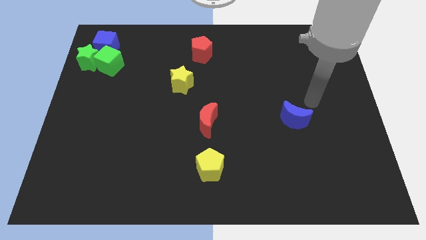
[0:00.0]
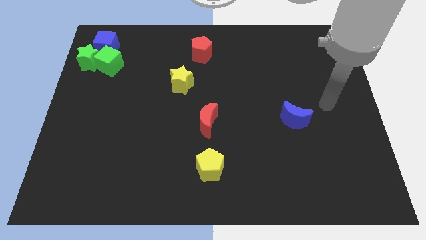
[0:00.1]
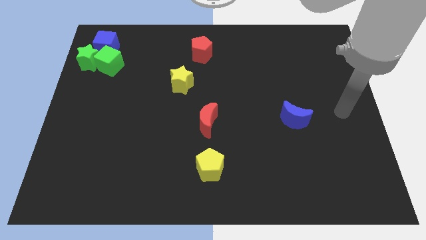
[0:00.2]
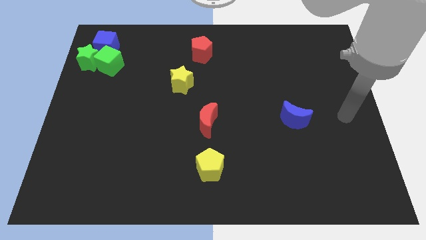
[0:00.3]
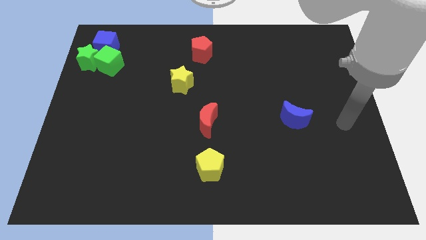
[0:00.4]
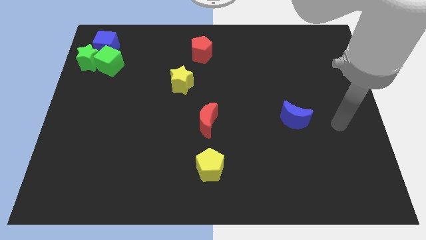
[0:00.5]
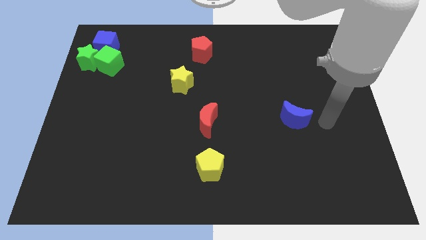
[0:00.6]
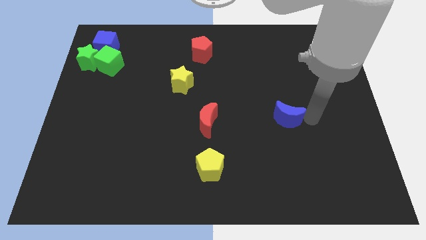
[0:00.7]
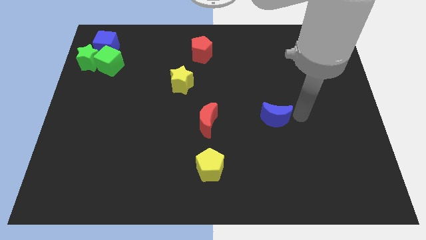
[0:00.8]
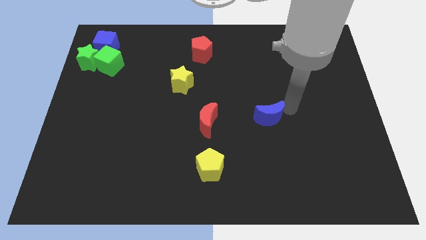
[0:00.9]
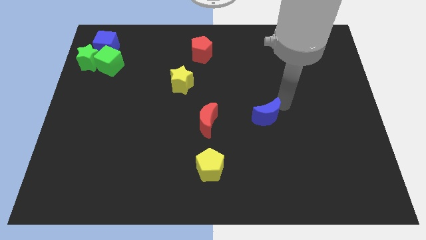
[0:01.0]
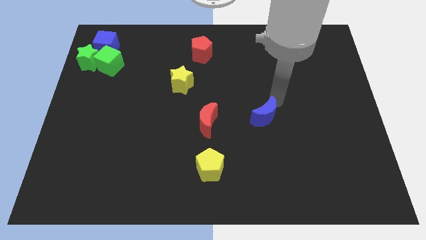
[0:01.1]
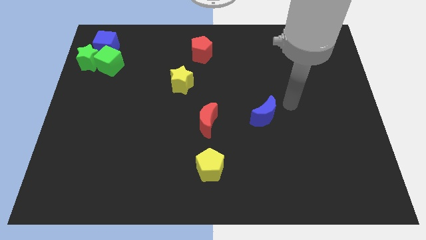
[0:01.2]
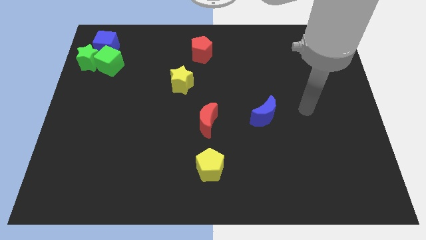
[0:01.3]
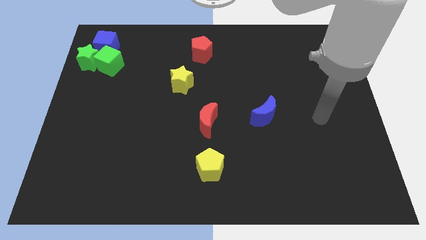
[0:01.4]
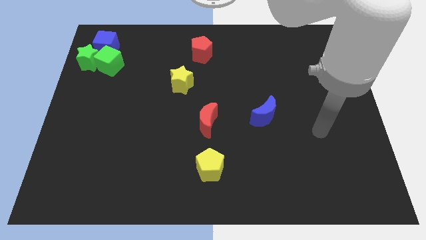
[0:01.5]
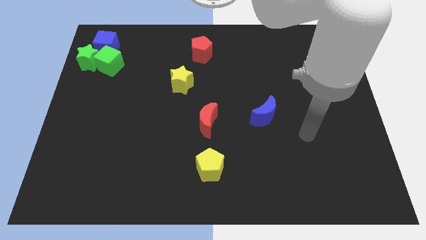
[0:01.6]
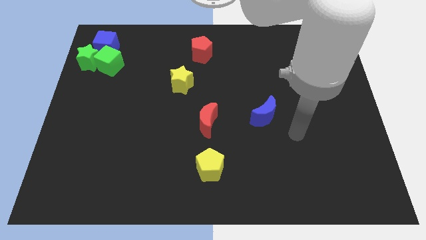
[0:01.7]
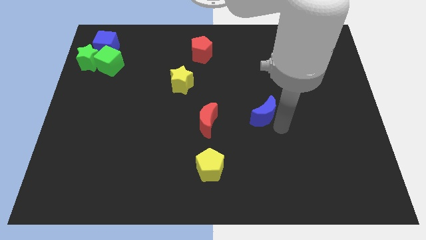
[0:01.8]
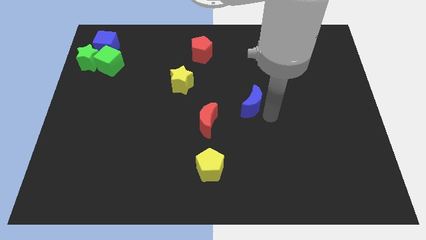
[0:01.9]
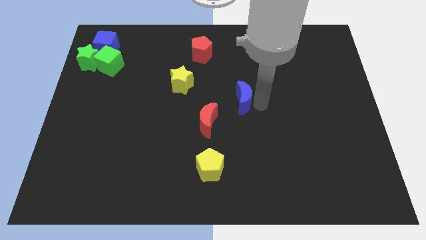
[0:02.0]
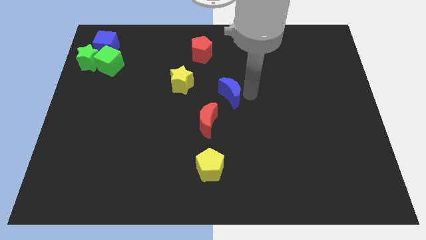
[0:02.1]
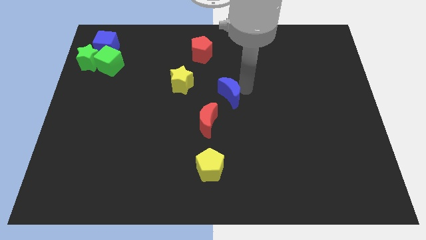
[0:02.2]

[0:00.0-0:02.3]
move the blue moon towards the right top of the red crescent

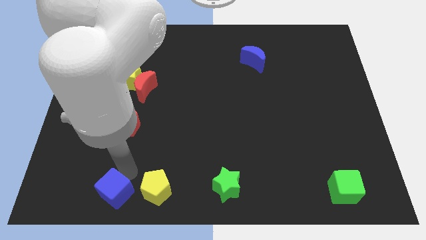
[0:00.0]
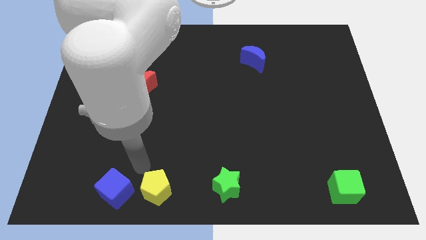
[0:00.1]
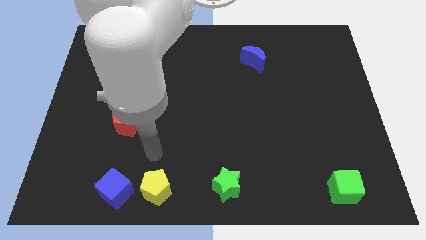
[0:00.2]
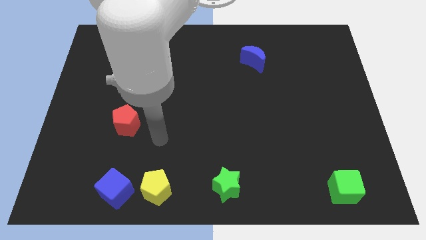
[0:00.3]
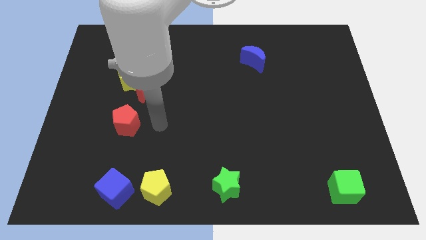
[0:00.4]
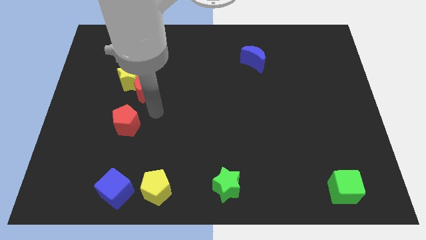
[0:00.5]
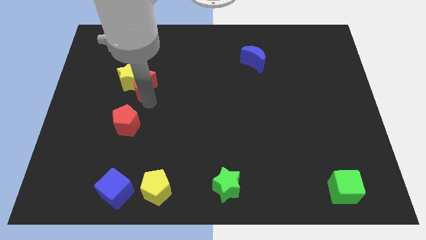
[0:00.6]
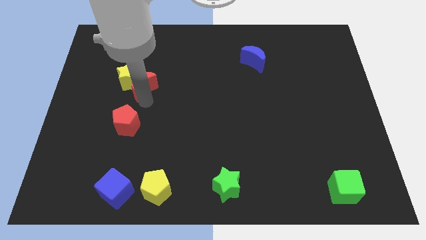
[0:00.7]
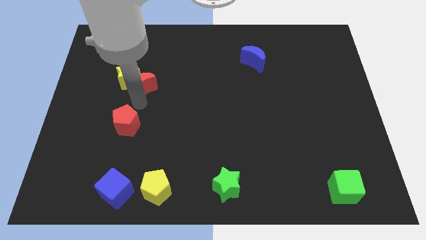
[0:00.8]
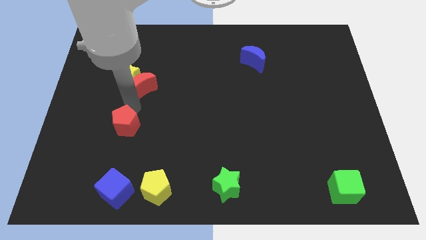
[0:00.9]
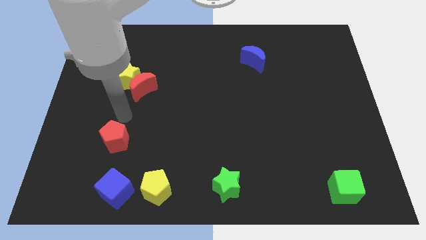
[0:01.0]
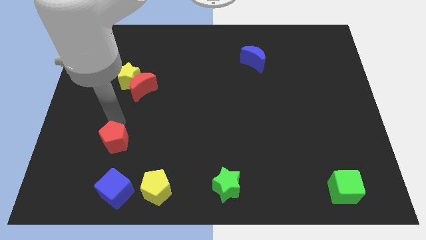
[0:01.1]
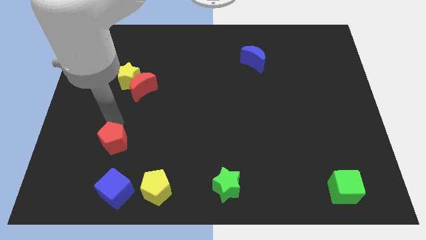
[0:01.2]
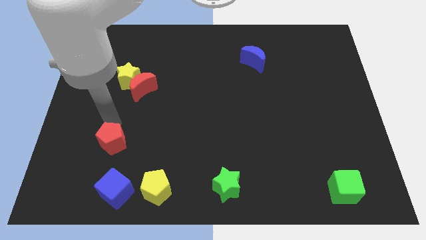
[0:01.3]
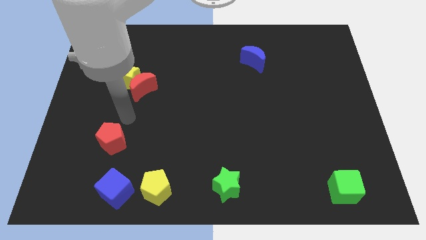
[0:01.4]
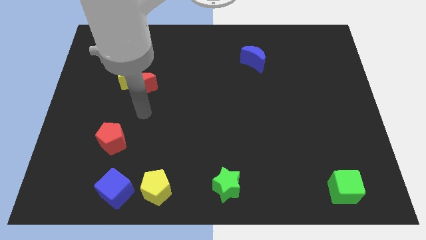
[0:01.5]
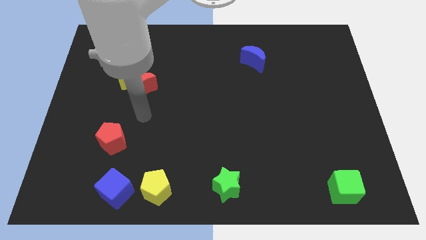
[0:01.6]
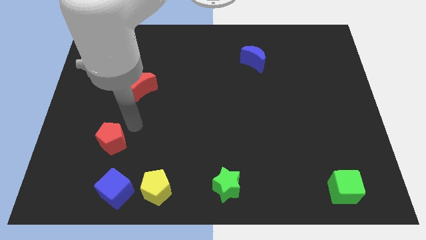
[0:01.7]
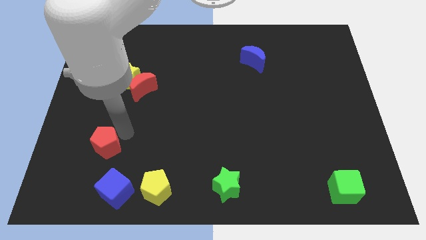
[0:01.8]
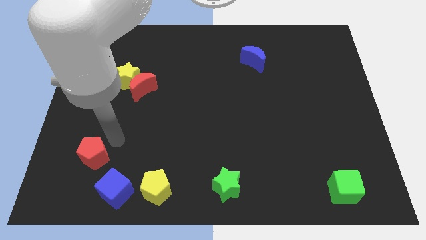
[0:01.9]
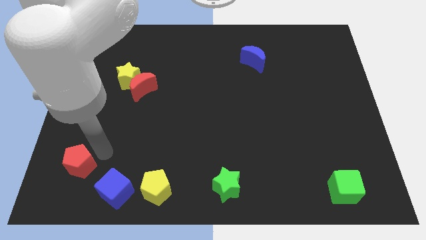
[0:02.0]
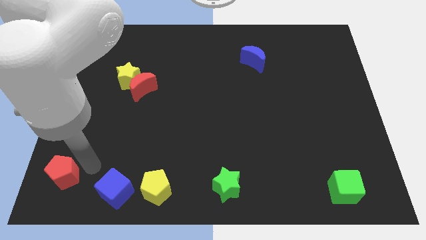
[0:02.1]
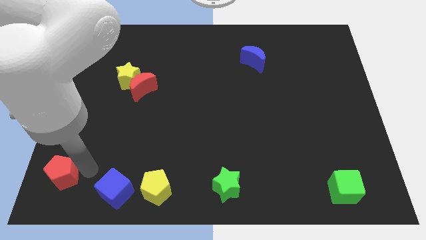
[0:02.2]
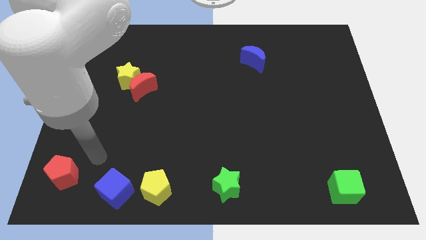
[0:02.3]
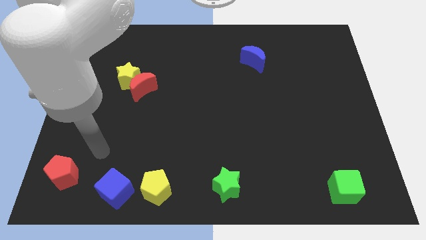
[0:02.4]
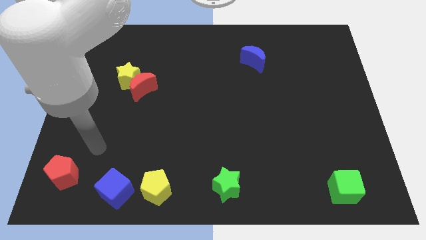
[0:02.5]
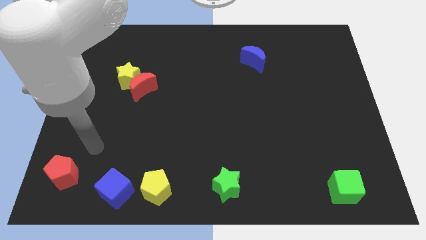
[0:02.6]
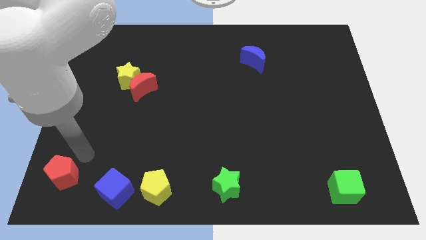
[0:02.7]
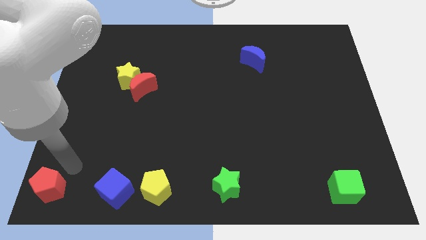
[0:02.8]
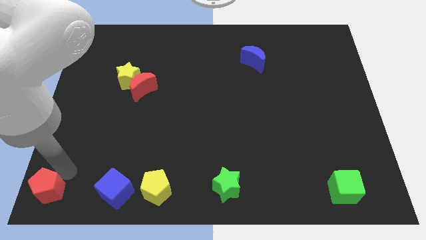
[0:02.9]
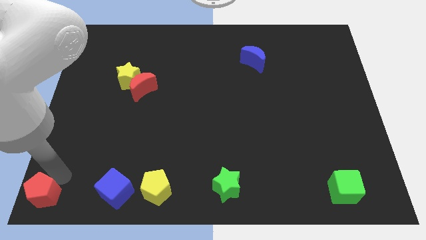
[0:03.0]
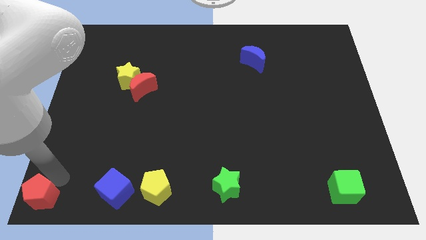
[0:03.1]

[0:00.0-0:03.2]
put the red pentagon at the bottom left corner of the board

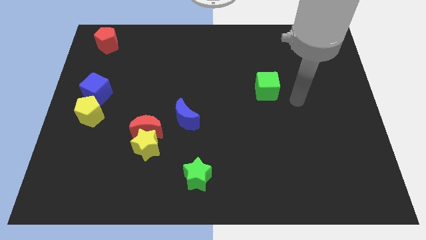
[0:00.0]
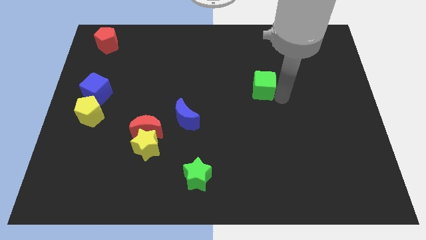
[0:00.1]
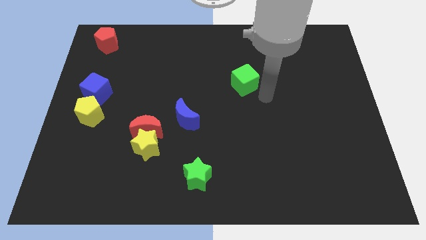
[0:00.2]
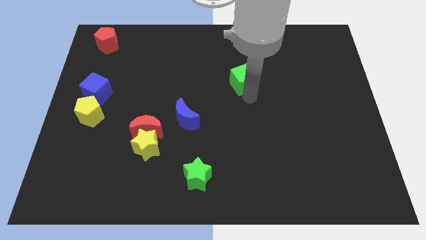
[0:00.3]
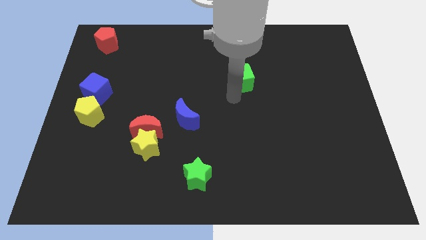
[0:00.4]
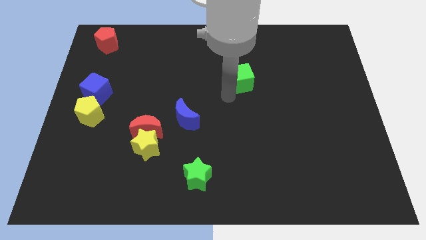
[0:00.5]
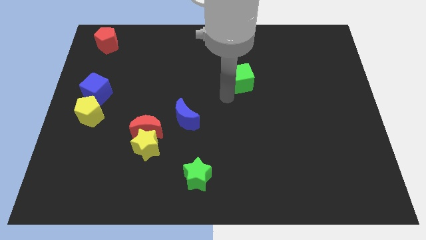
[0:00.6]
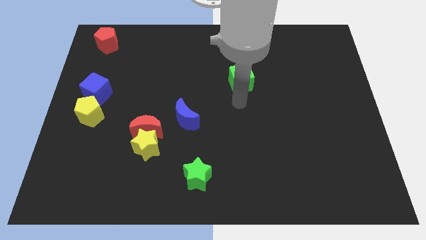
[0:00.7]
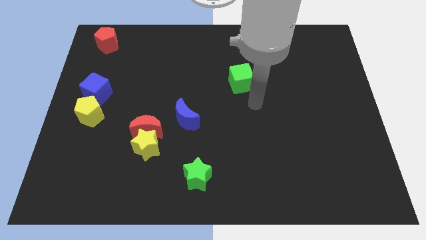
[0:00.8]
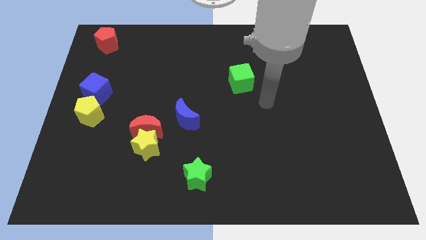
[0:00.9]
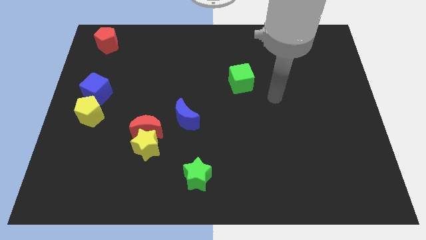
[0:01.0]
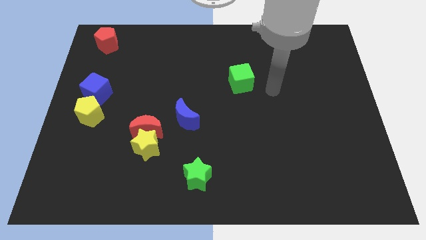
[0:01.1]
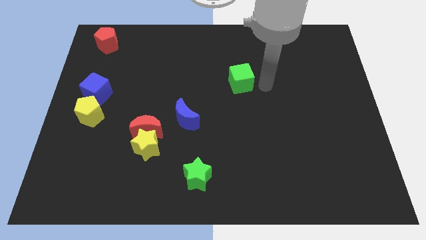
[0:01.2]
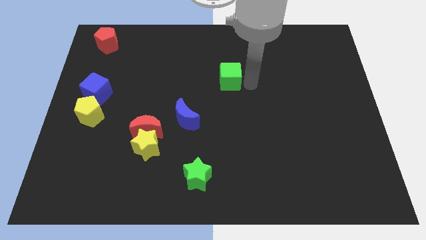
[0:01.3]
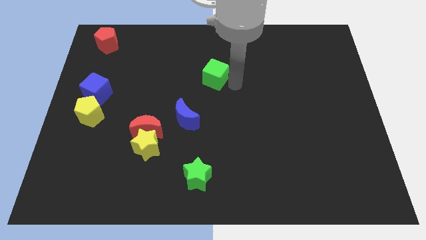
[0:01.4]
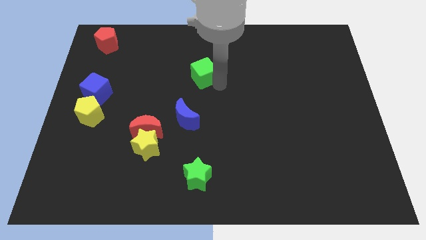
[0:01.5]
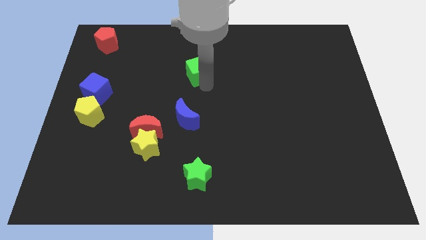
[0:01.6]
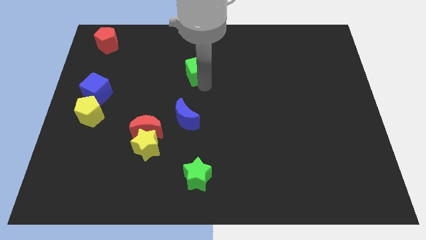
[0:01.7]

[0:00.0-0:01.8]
move the green cube vertically above the blue moon

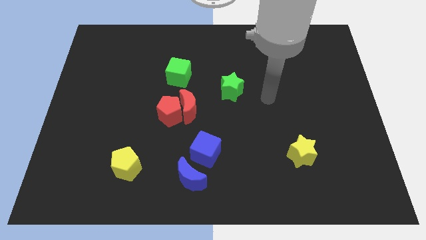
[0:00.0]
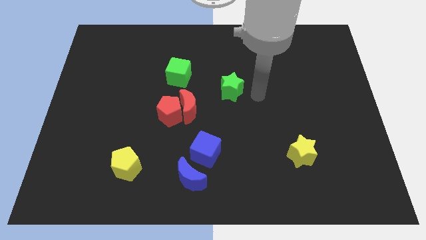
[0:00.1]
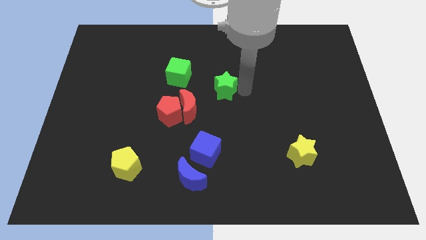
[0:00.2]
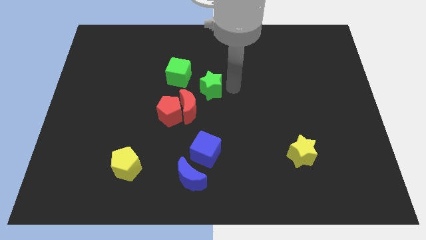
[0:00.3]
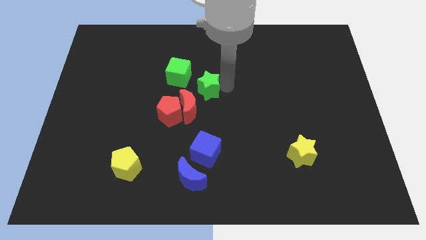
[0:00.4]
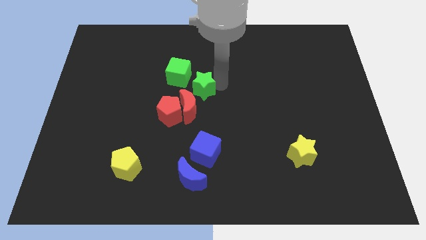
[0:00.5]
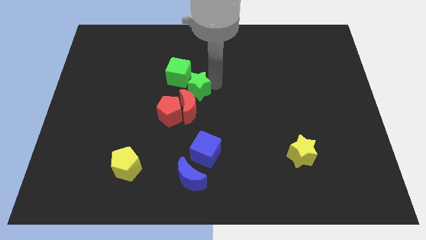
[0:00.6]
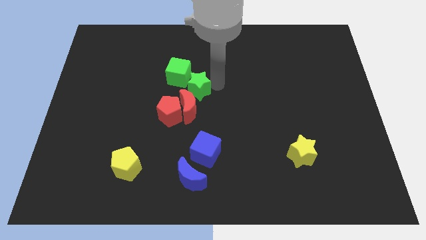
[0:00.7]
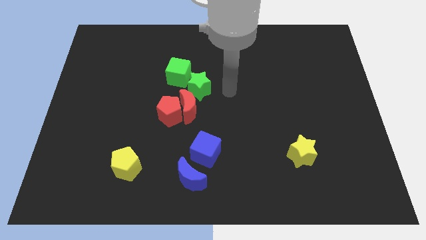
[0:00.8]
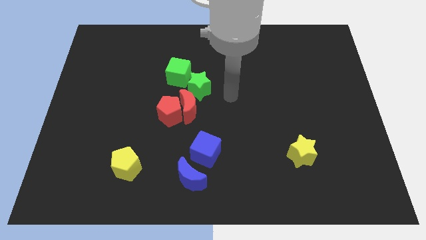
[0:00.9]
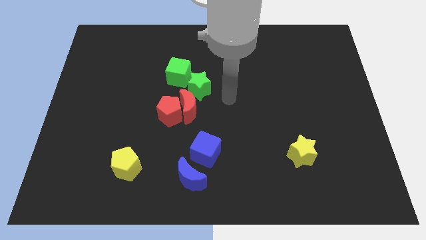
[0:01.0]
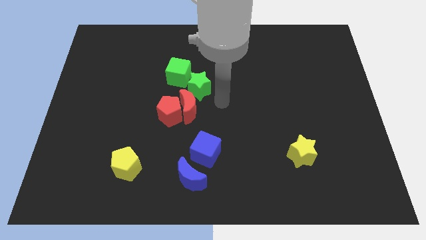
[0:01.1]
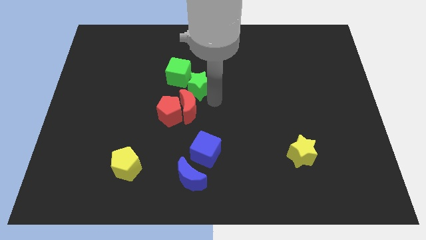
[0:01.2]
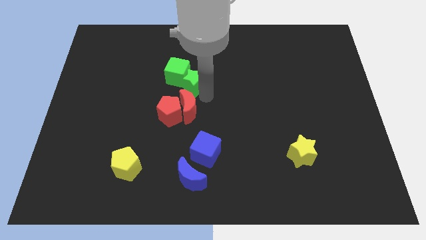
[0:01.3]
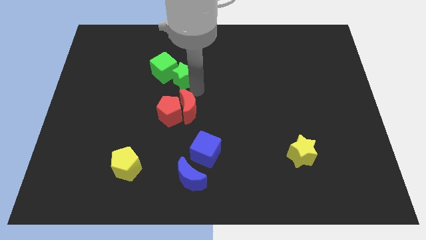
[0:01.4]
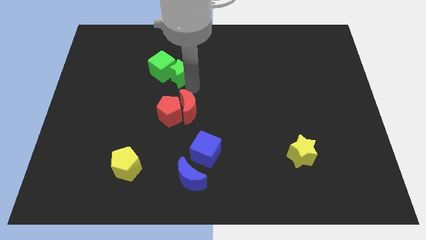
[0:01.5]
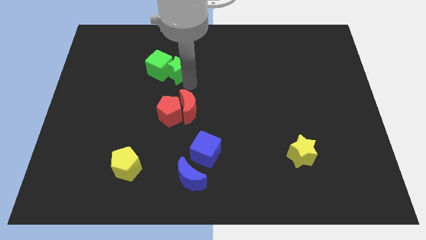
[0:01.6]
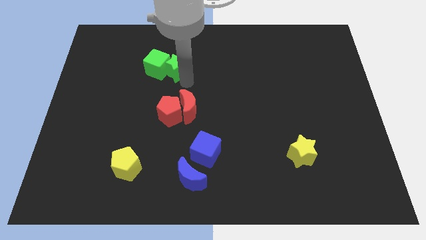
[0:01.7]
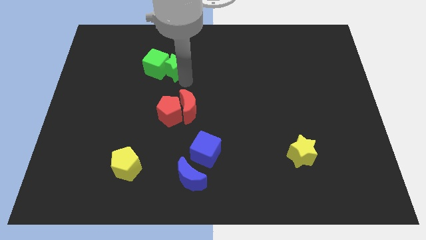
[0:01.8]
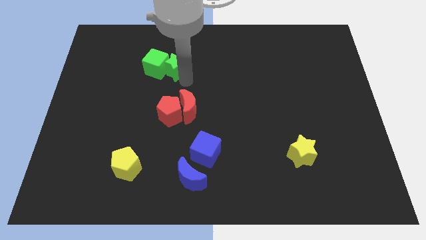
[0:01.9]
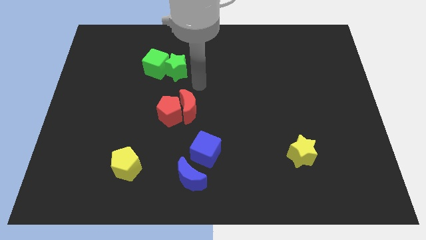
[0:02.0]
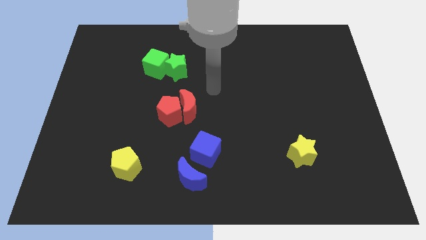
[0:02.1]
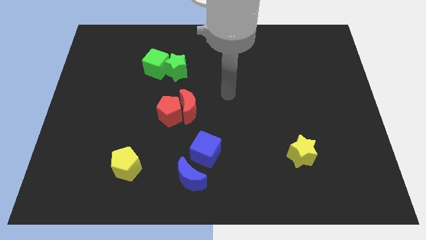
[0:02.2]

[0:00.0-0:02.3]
push the green star and green cube together above red blocks
